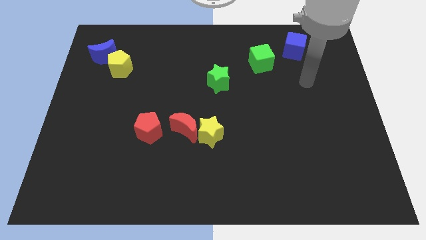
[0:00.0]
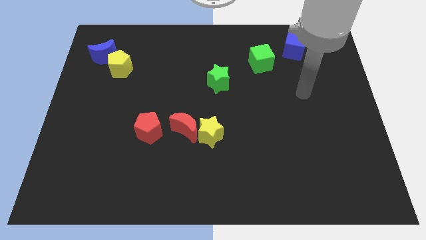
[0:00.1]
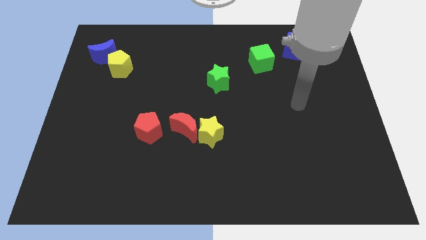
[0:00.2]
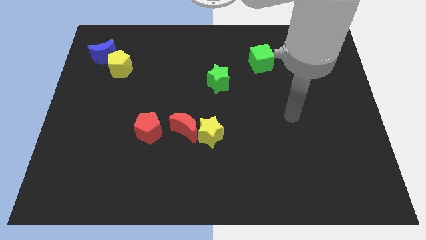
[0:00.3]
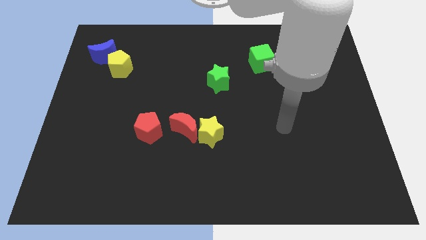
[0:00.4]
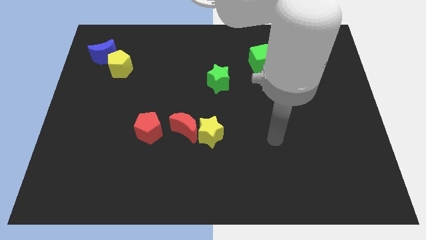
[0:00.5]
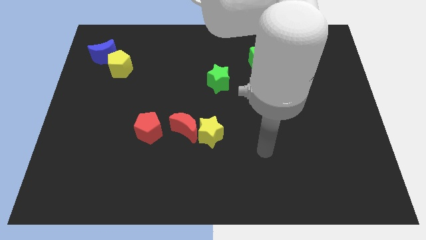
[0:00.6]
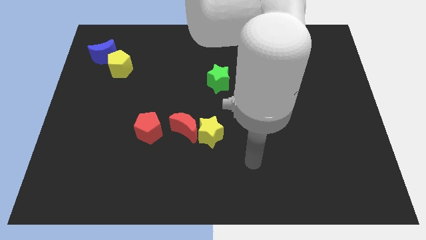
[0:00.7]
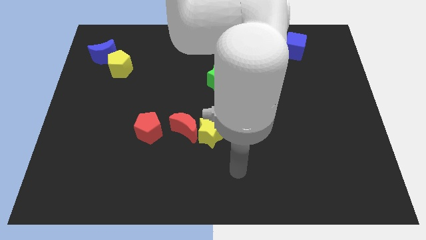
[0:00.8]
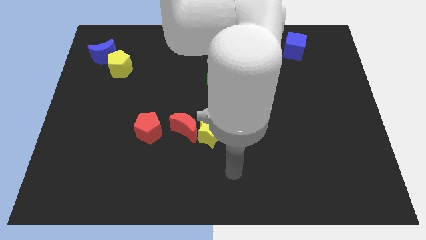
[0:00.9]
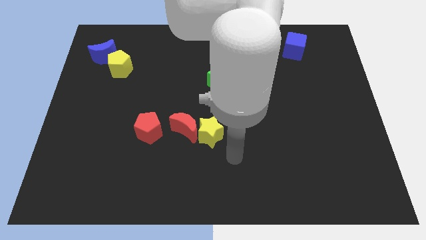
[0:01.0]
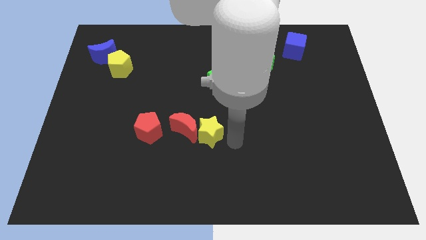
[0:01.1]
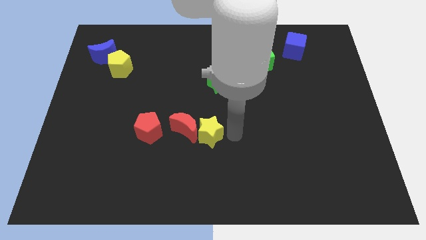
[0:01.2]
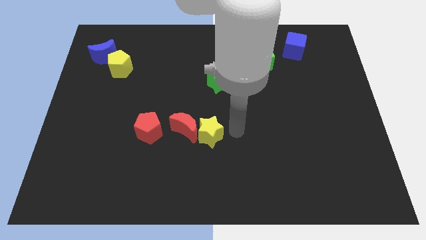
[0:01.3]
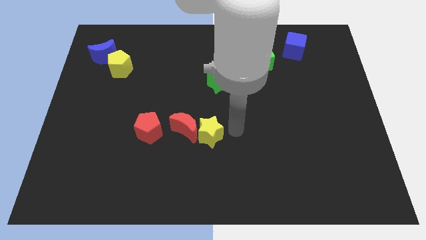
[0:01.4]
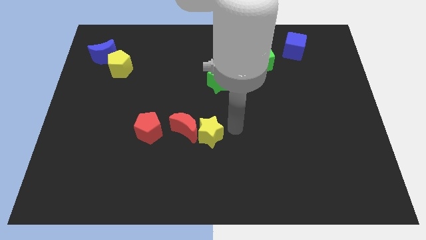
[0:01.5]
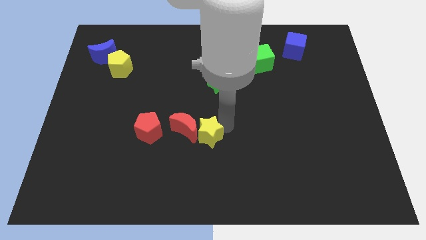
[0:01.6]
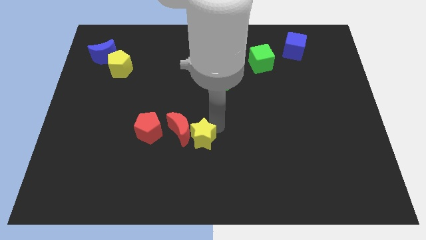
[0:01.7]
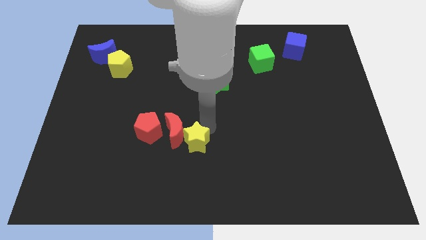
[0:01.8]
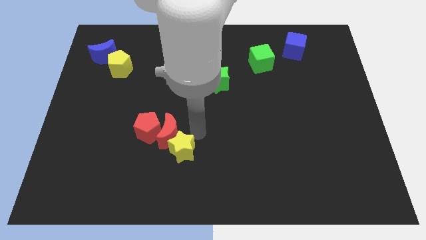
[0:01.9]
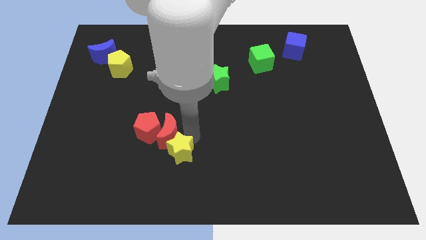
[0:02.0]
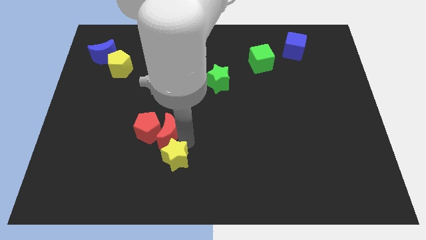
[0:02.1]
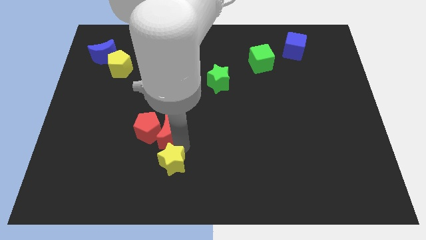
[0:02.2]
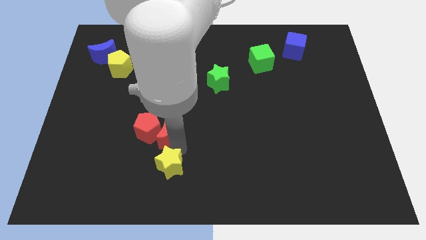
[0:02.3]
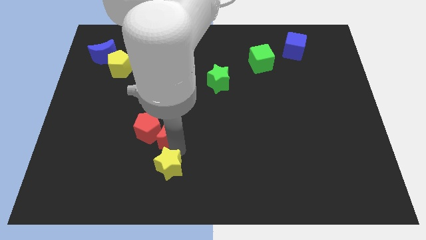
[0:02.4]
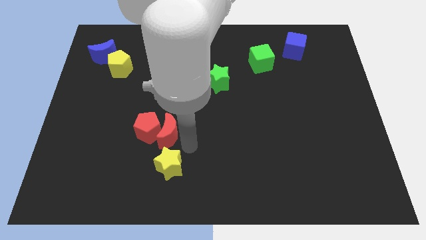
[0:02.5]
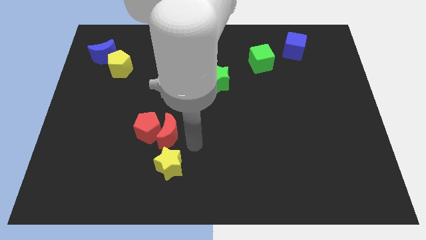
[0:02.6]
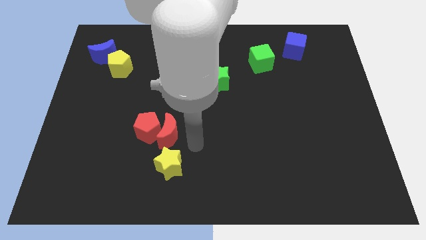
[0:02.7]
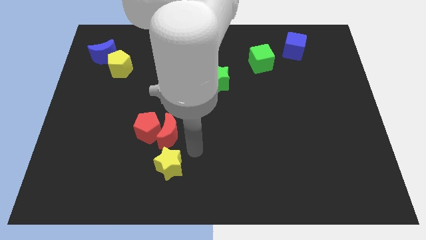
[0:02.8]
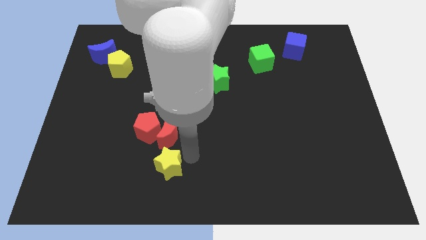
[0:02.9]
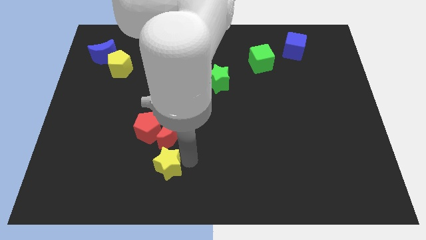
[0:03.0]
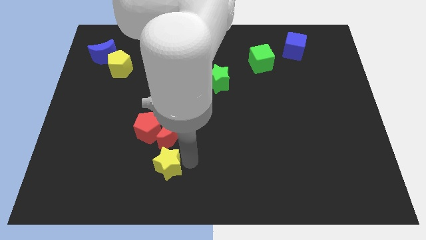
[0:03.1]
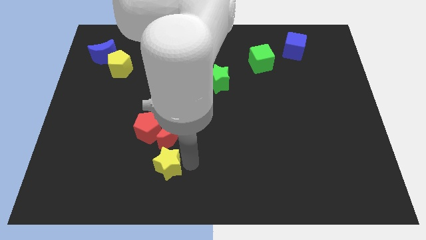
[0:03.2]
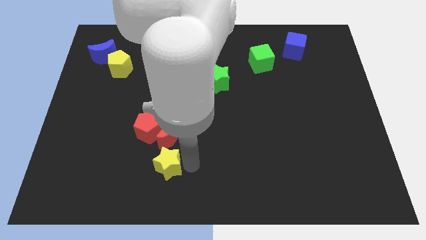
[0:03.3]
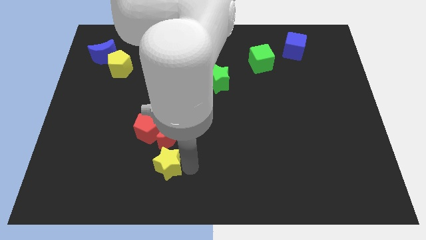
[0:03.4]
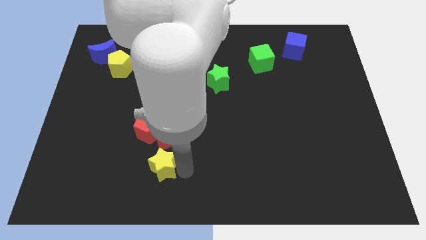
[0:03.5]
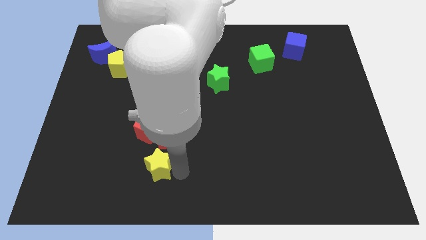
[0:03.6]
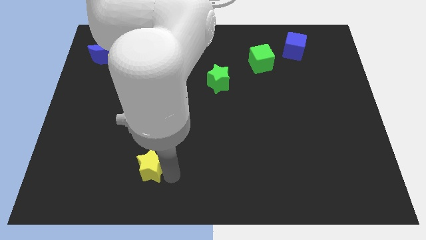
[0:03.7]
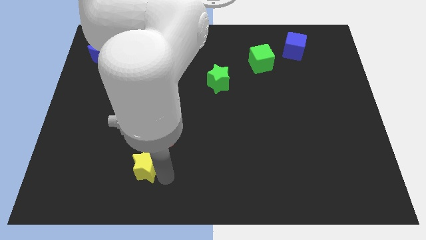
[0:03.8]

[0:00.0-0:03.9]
push the yellow star to the left of the board

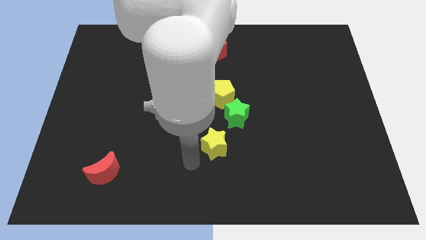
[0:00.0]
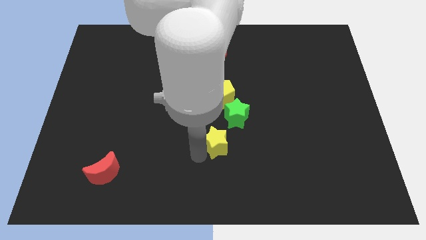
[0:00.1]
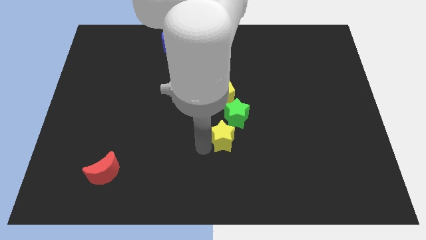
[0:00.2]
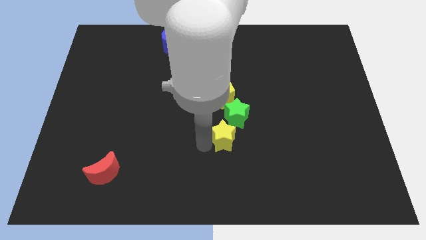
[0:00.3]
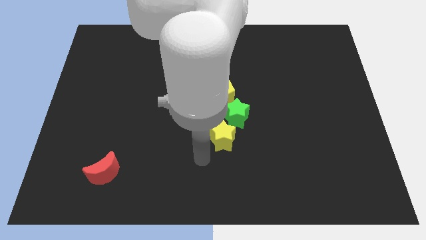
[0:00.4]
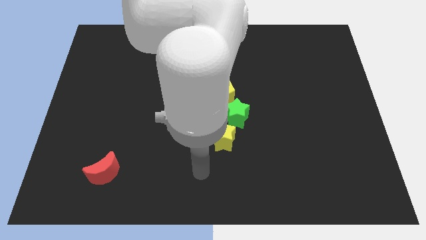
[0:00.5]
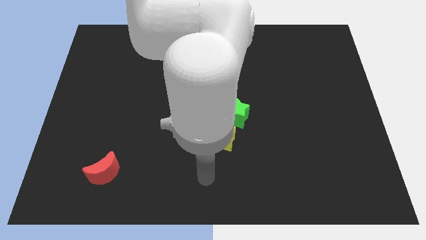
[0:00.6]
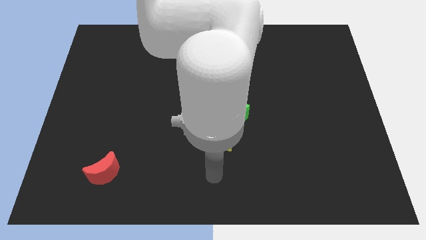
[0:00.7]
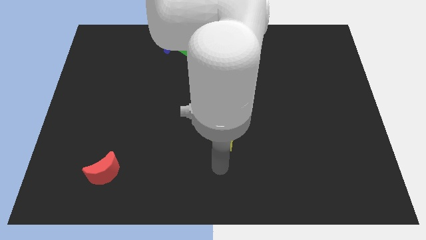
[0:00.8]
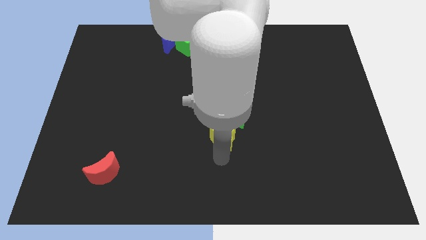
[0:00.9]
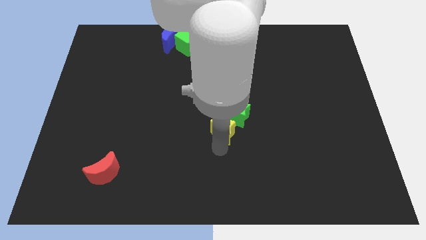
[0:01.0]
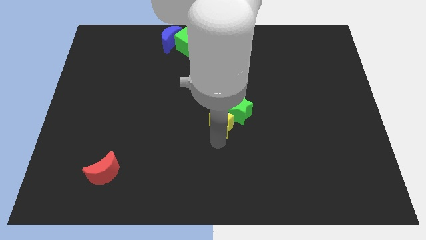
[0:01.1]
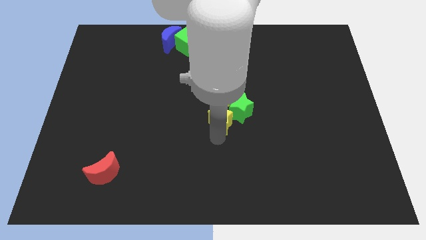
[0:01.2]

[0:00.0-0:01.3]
push the yellow star into the green star

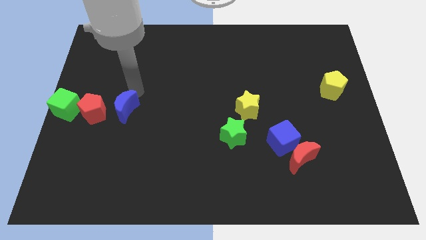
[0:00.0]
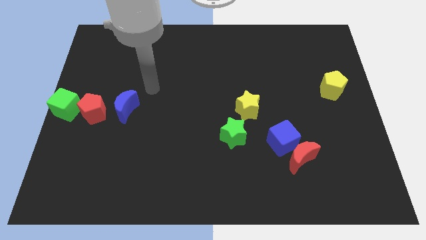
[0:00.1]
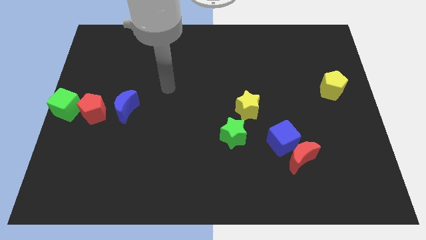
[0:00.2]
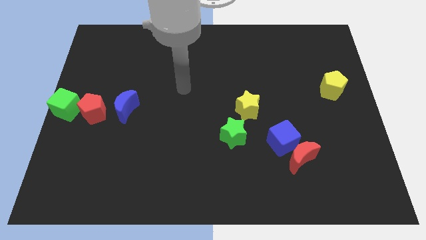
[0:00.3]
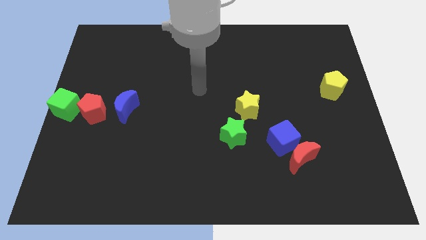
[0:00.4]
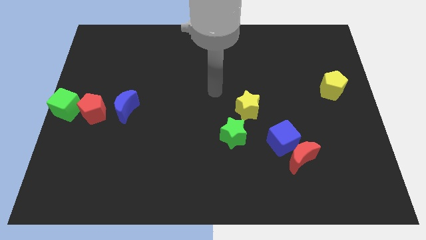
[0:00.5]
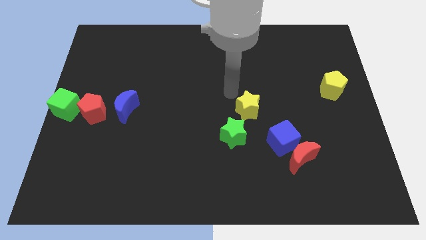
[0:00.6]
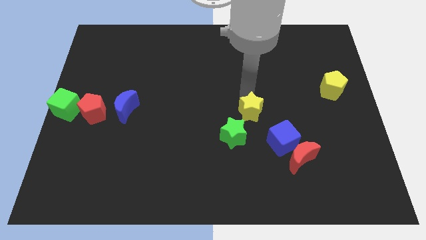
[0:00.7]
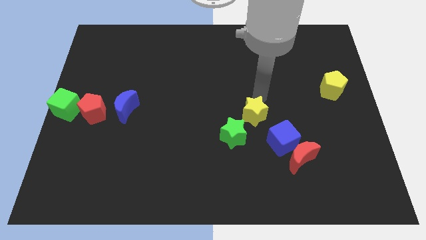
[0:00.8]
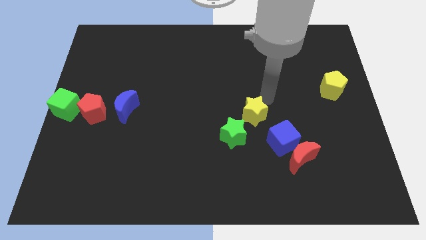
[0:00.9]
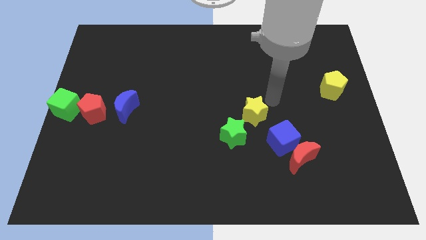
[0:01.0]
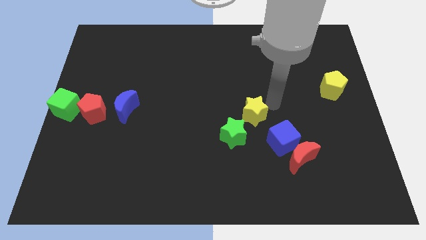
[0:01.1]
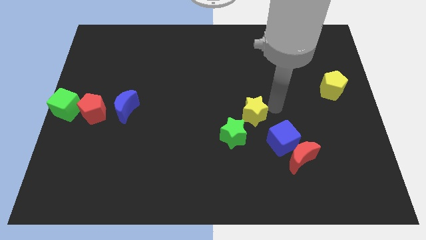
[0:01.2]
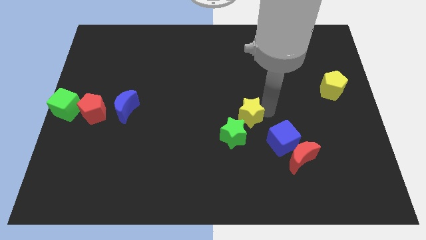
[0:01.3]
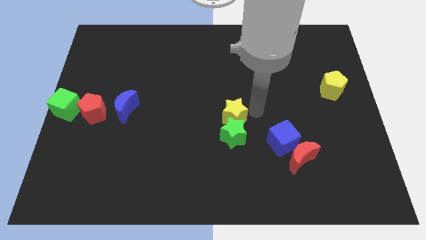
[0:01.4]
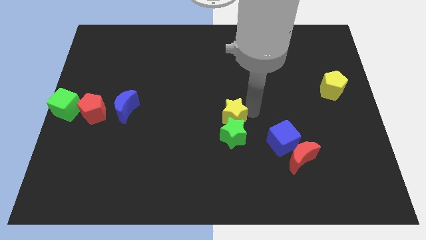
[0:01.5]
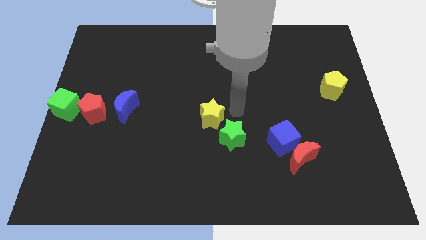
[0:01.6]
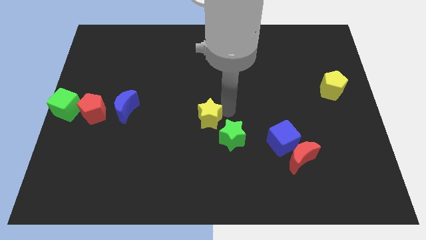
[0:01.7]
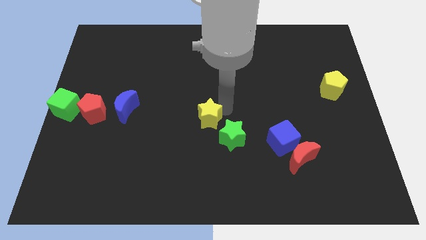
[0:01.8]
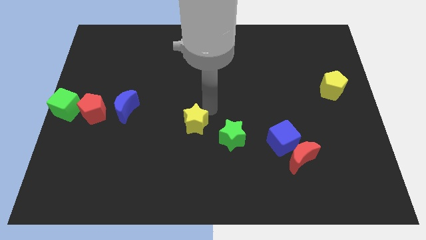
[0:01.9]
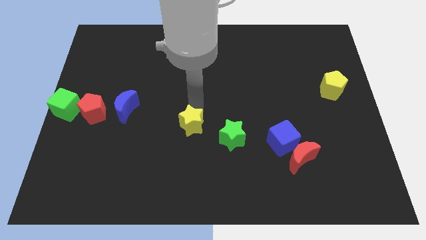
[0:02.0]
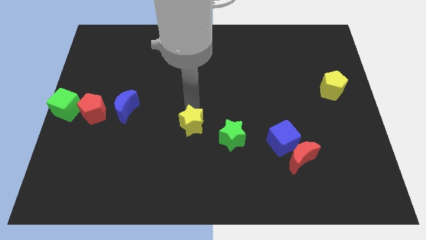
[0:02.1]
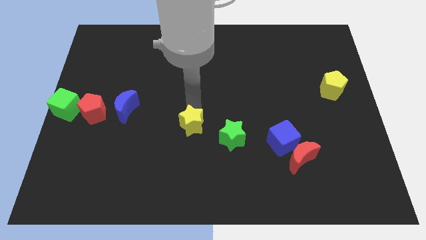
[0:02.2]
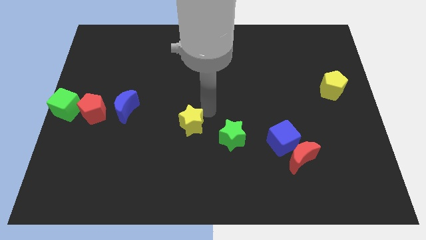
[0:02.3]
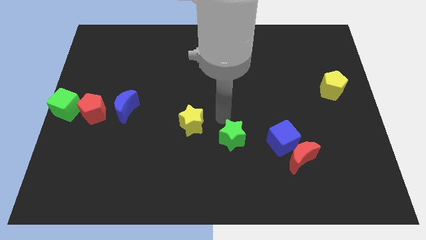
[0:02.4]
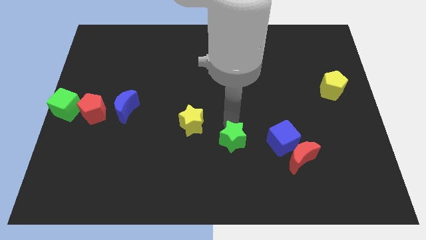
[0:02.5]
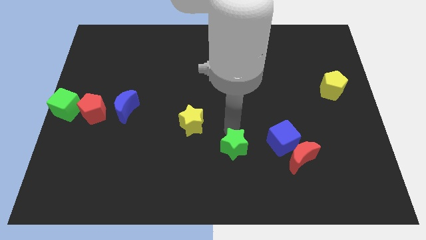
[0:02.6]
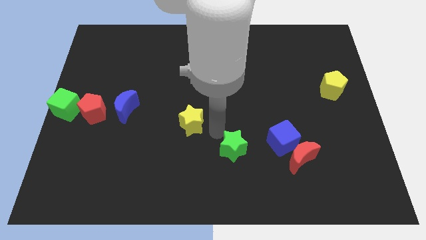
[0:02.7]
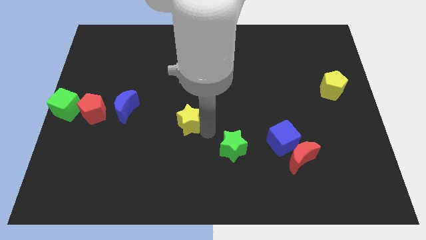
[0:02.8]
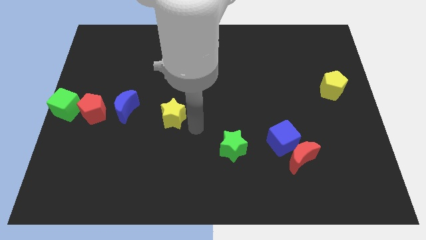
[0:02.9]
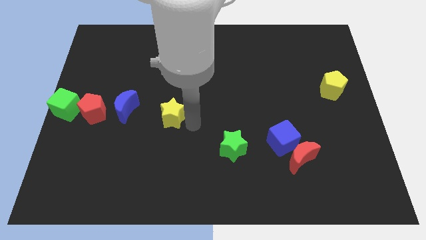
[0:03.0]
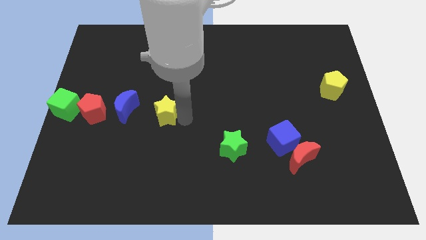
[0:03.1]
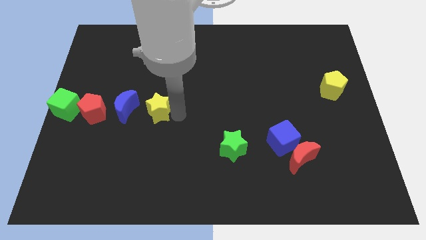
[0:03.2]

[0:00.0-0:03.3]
push the yellow star closer to the blue moon

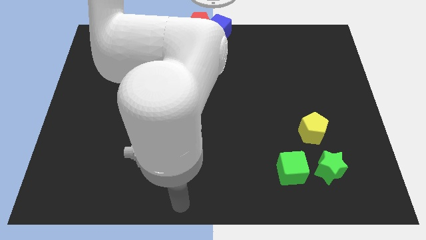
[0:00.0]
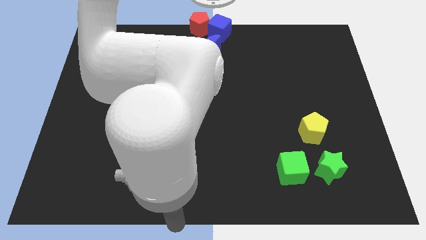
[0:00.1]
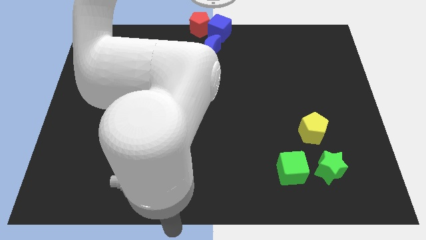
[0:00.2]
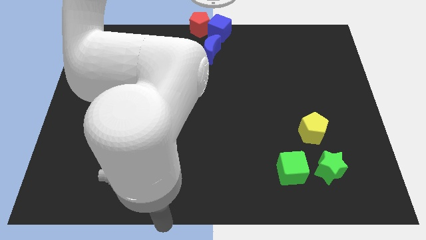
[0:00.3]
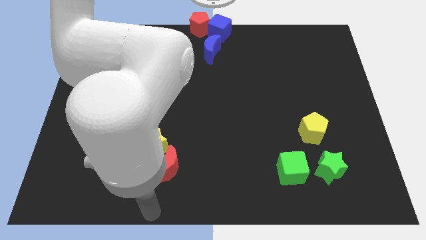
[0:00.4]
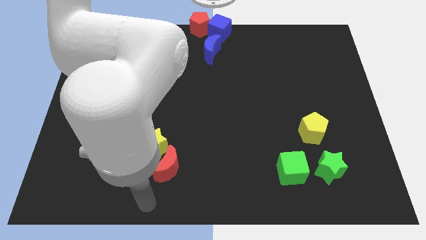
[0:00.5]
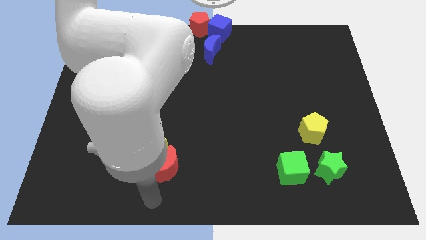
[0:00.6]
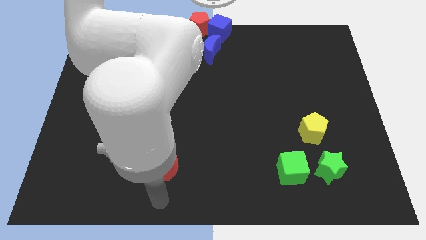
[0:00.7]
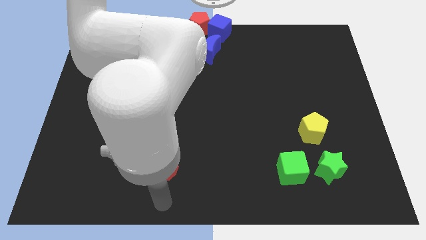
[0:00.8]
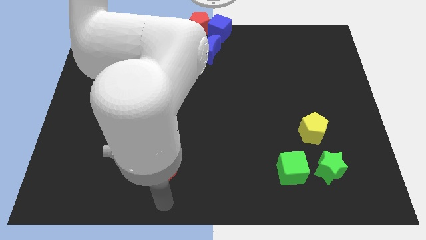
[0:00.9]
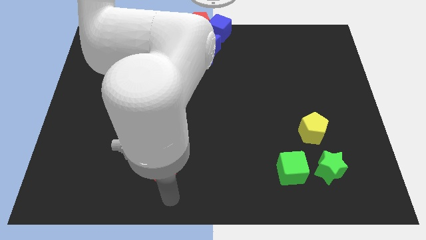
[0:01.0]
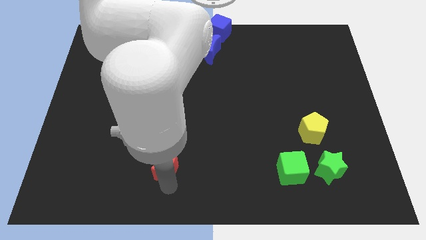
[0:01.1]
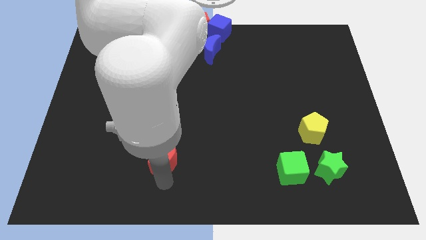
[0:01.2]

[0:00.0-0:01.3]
place your arm at the bottom of the red crescent
